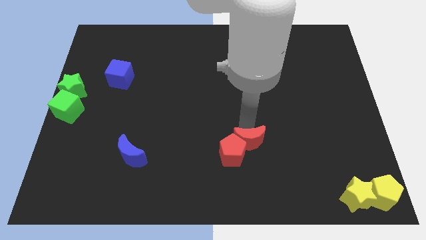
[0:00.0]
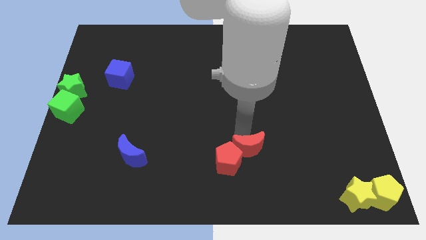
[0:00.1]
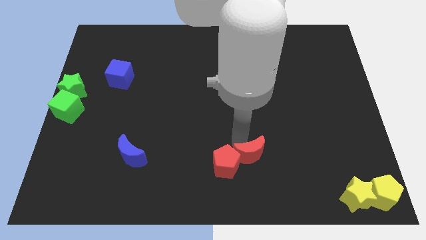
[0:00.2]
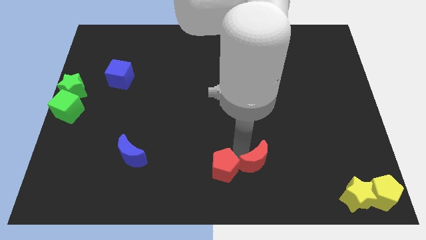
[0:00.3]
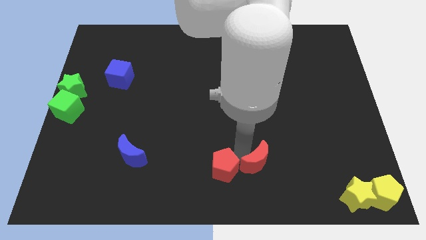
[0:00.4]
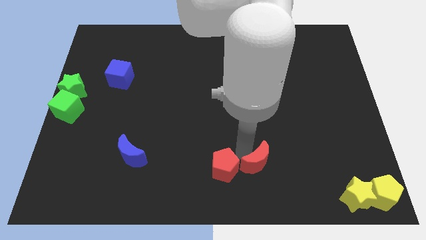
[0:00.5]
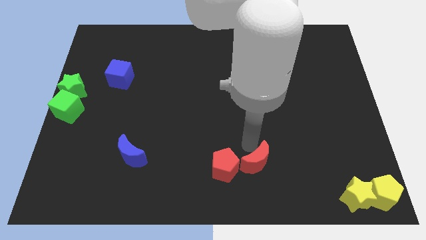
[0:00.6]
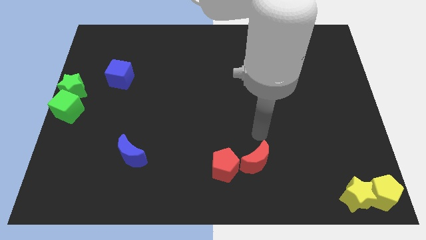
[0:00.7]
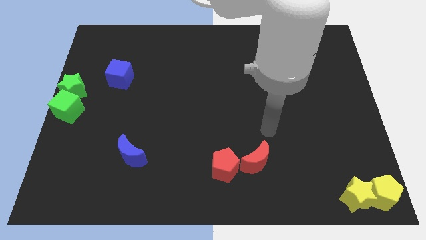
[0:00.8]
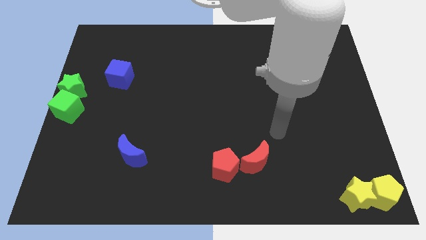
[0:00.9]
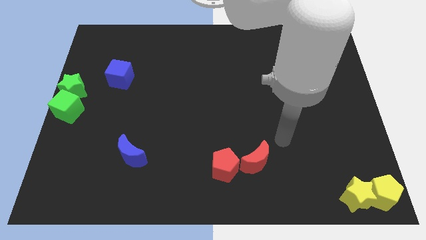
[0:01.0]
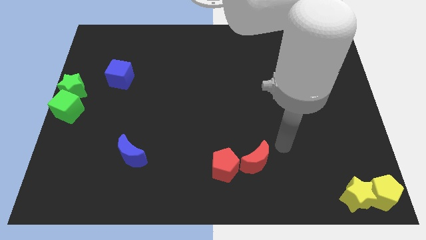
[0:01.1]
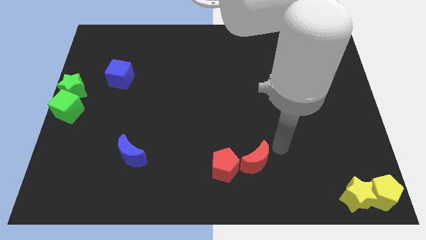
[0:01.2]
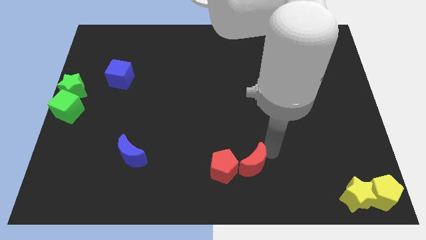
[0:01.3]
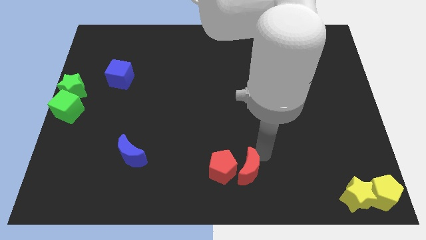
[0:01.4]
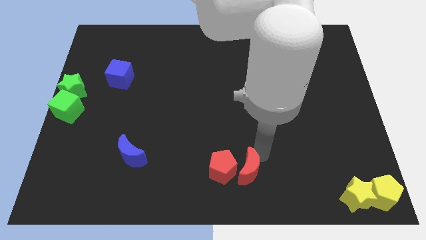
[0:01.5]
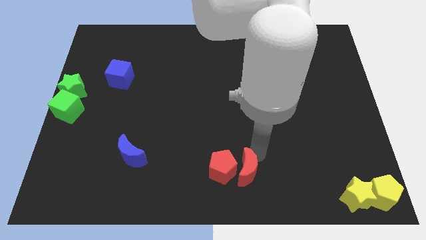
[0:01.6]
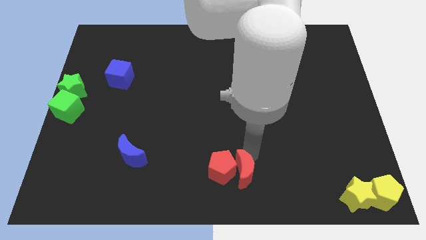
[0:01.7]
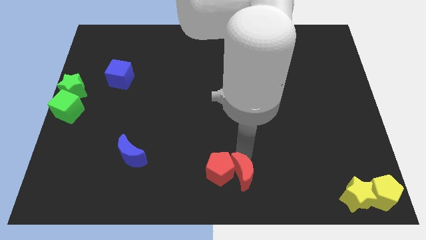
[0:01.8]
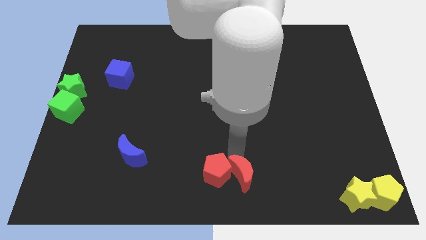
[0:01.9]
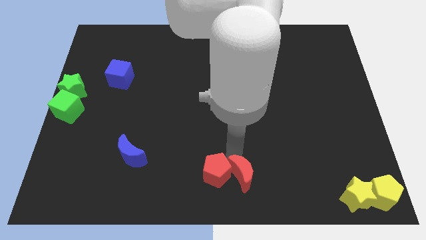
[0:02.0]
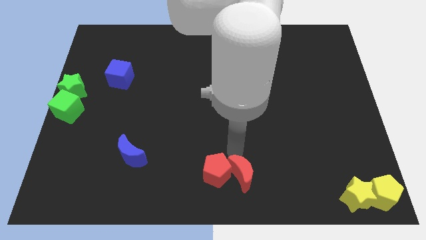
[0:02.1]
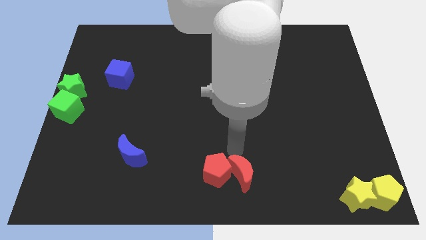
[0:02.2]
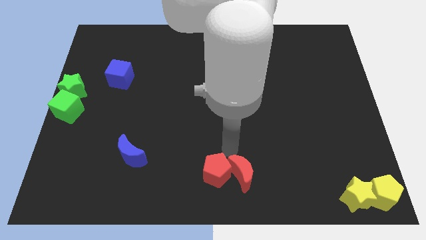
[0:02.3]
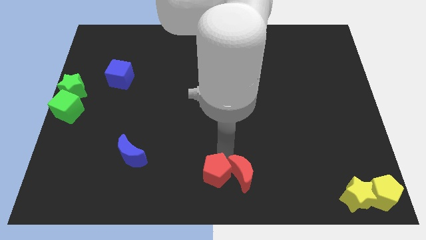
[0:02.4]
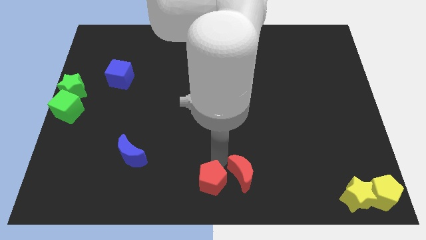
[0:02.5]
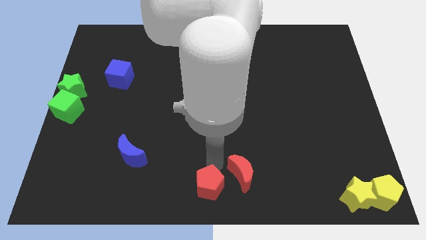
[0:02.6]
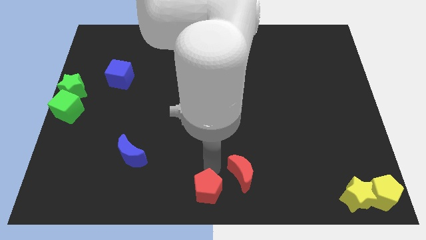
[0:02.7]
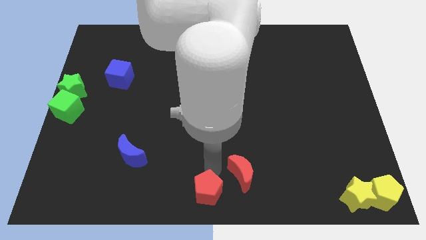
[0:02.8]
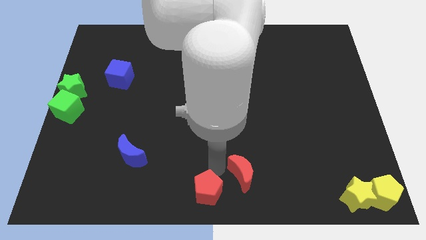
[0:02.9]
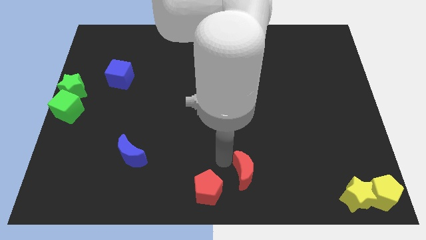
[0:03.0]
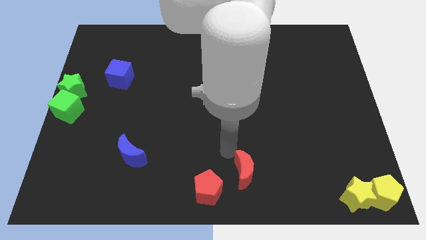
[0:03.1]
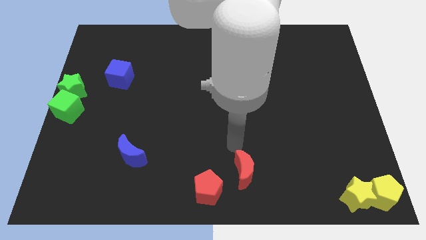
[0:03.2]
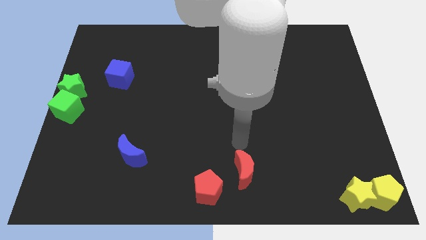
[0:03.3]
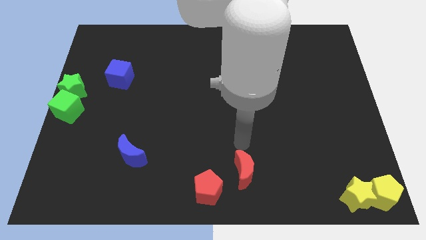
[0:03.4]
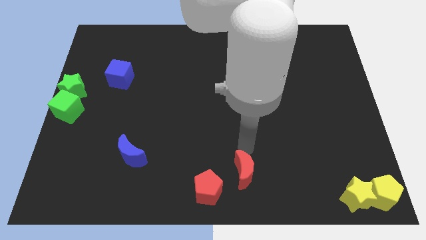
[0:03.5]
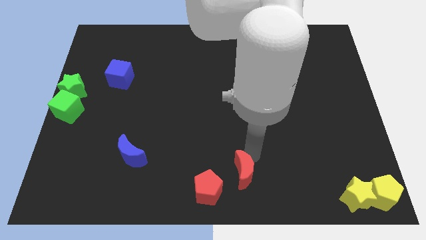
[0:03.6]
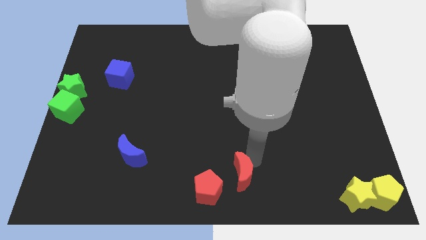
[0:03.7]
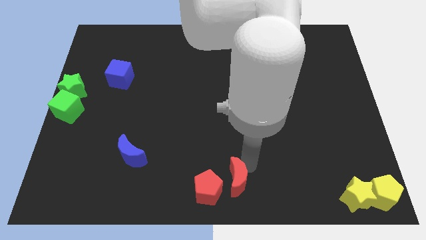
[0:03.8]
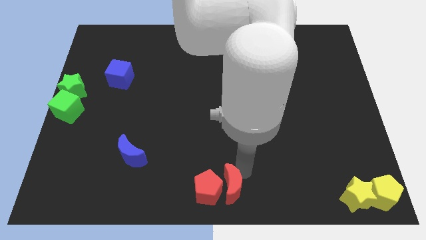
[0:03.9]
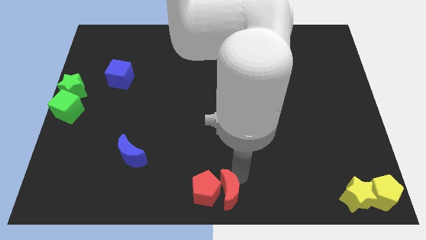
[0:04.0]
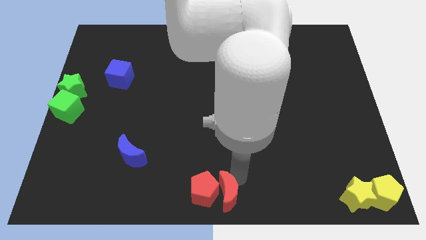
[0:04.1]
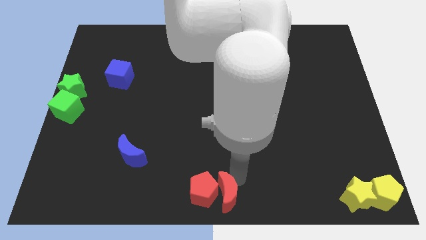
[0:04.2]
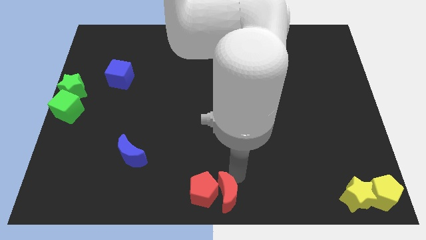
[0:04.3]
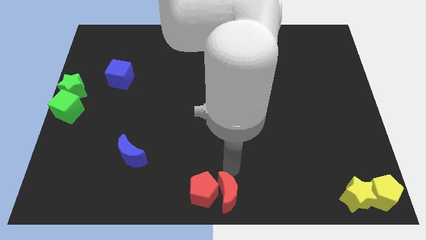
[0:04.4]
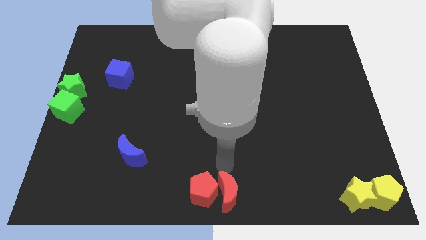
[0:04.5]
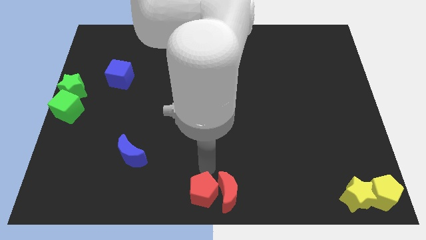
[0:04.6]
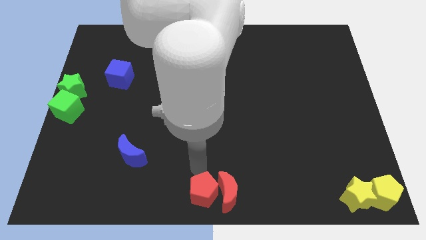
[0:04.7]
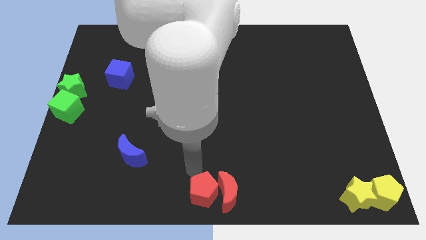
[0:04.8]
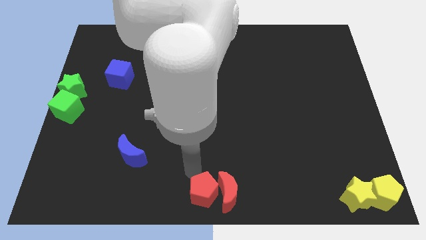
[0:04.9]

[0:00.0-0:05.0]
move the red blocks towards the bottom centre of the board

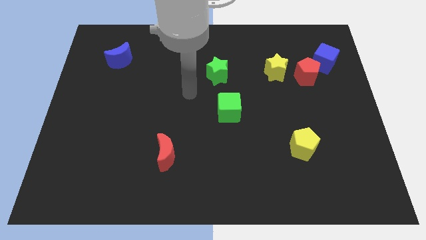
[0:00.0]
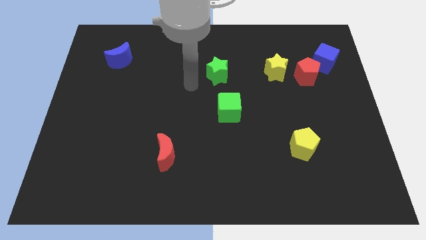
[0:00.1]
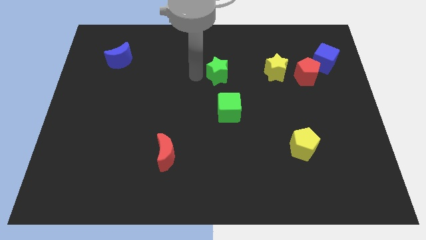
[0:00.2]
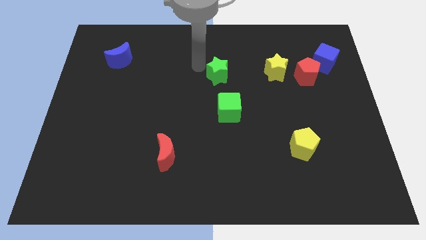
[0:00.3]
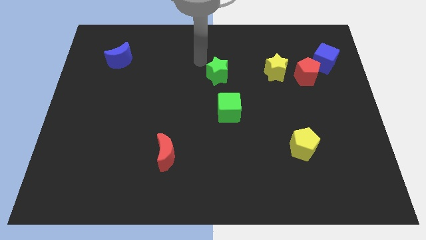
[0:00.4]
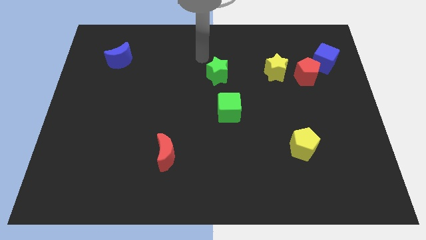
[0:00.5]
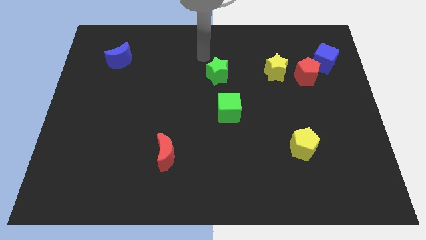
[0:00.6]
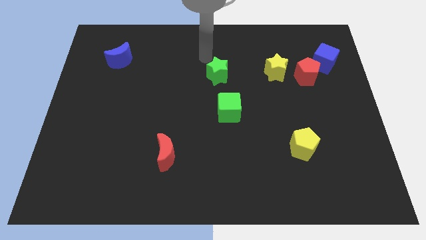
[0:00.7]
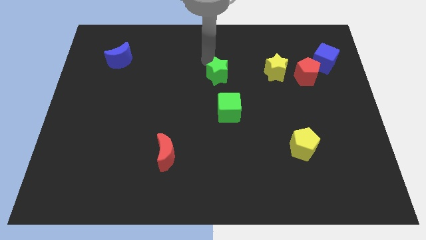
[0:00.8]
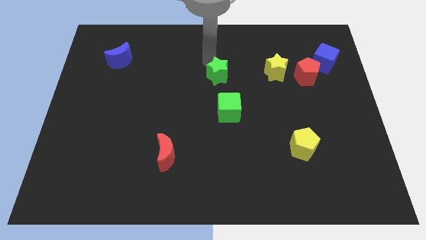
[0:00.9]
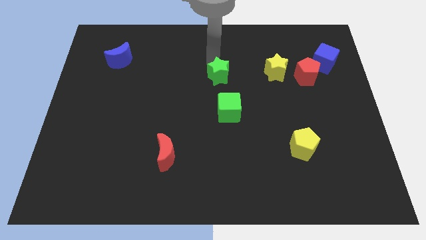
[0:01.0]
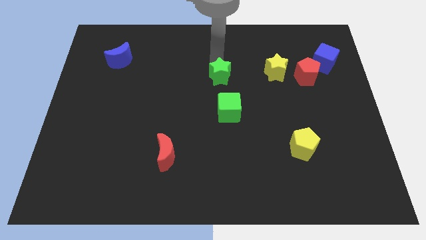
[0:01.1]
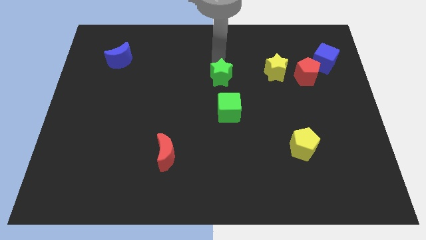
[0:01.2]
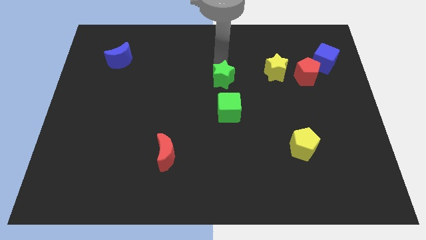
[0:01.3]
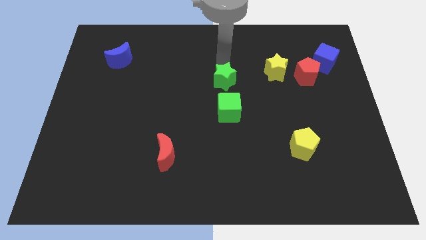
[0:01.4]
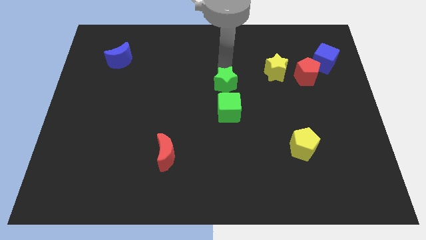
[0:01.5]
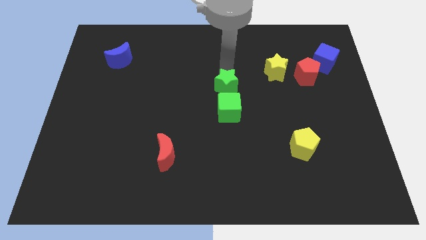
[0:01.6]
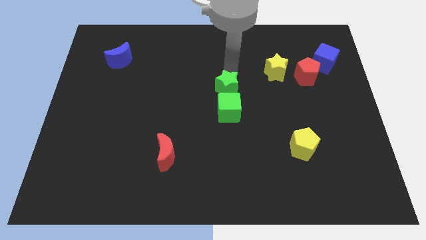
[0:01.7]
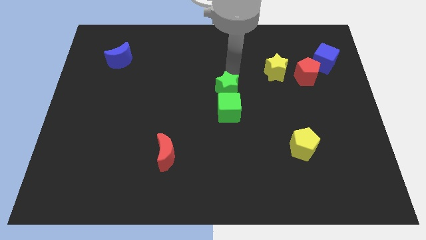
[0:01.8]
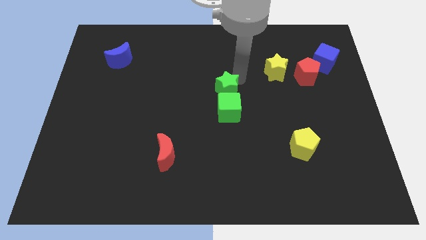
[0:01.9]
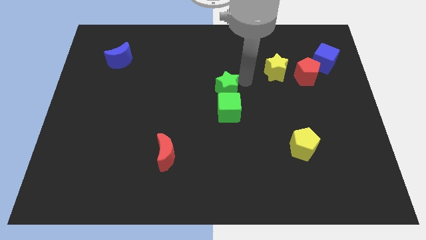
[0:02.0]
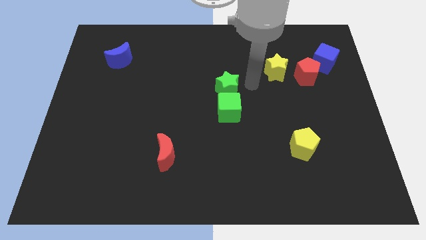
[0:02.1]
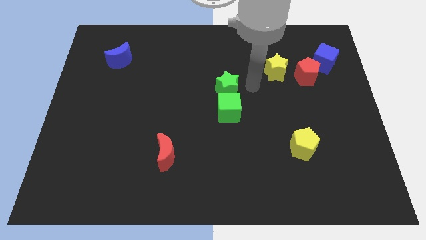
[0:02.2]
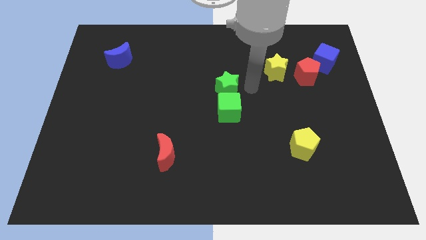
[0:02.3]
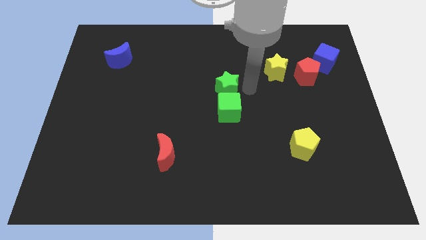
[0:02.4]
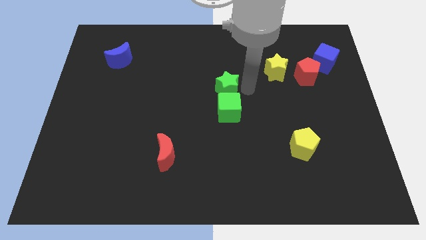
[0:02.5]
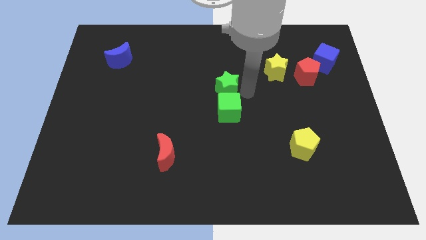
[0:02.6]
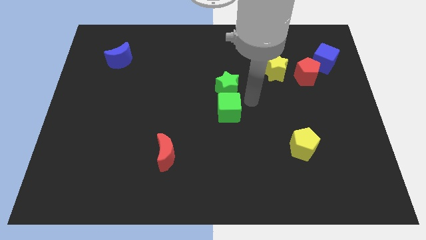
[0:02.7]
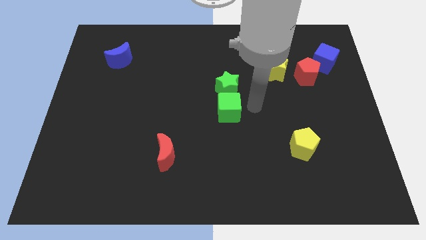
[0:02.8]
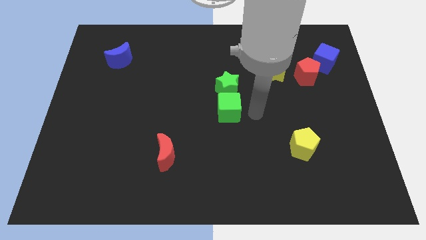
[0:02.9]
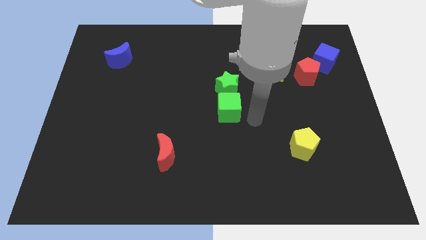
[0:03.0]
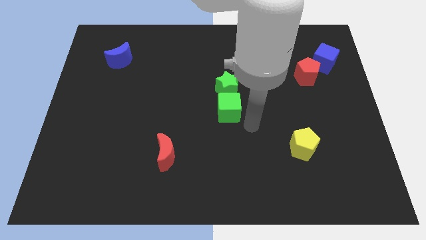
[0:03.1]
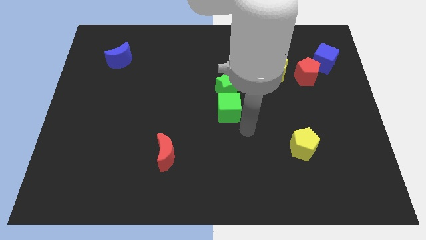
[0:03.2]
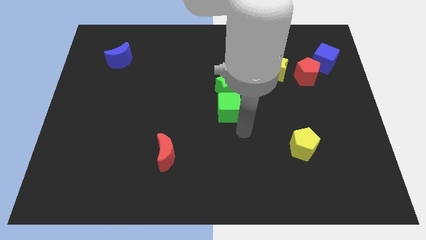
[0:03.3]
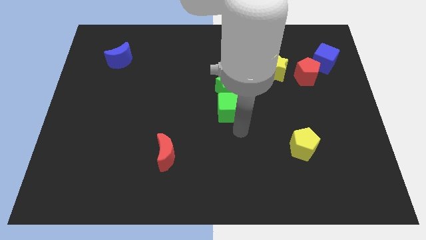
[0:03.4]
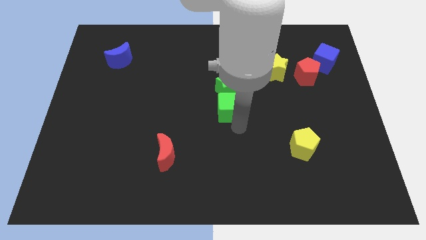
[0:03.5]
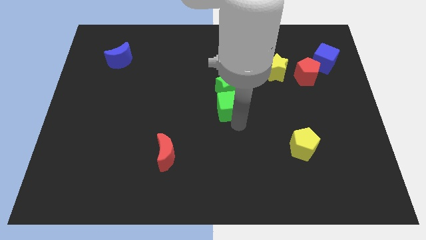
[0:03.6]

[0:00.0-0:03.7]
move green star into green cube

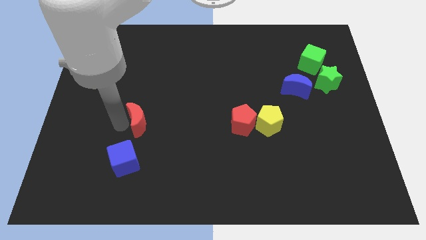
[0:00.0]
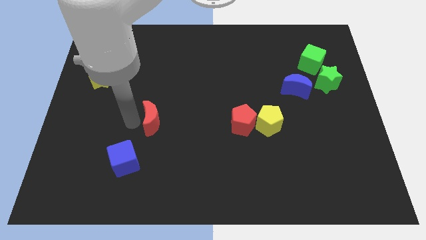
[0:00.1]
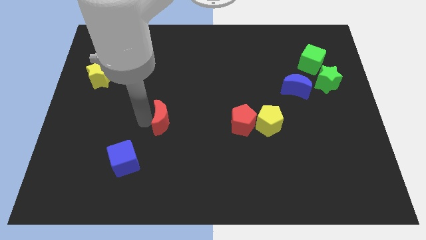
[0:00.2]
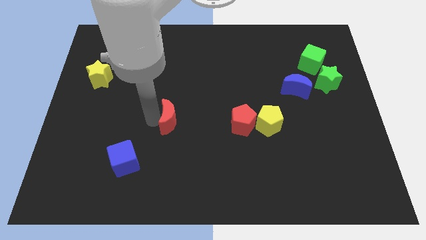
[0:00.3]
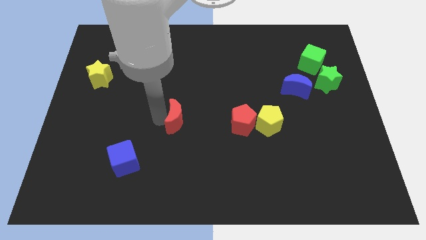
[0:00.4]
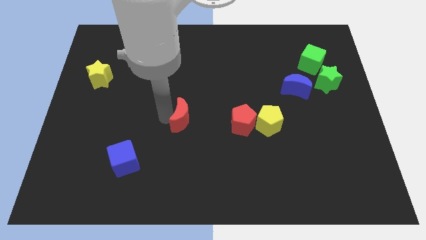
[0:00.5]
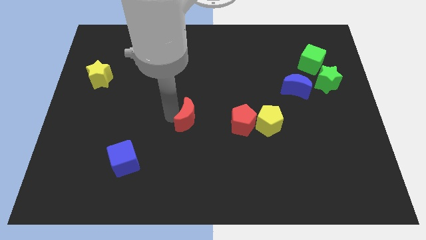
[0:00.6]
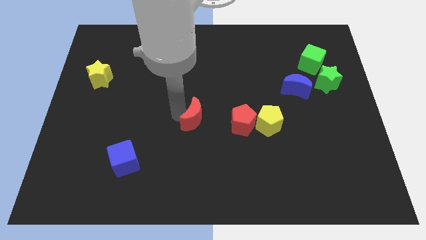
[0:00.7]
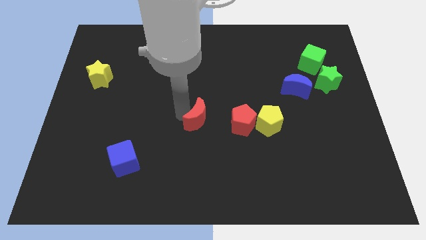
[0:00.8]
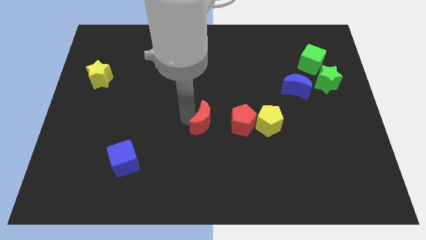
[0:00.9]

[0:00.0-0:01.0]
slide red moon towards red pentagon
